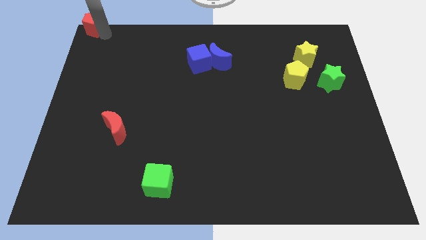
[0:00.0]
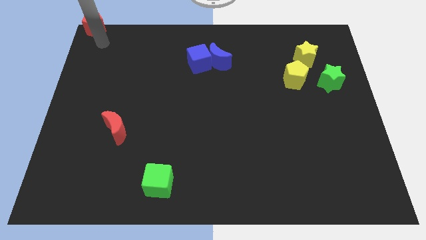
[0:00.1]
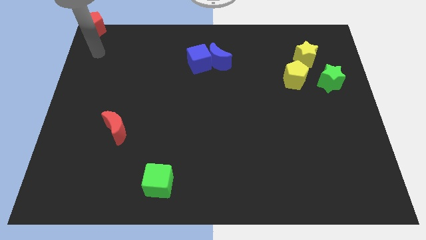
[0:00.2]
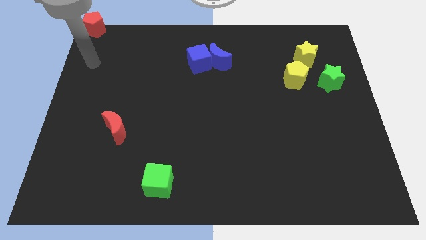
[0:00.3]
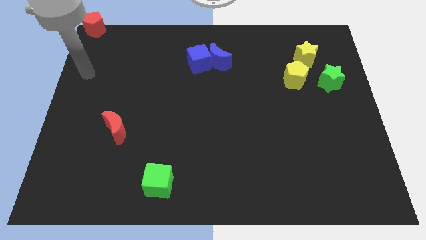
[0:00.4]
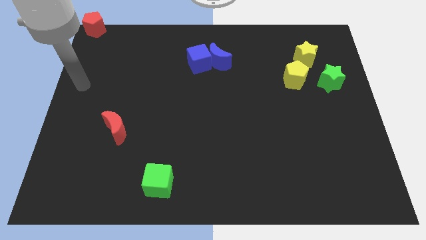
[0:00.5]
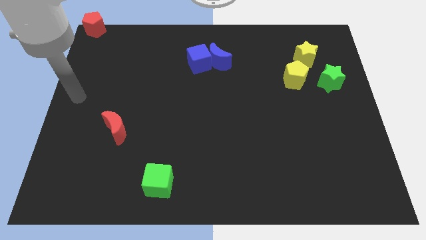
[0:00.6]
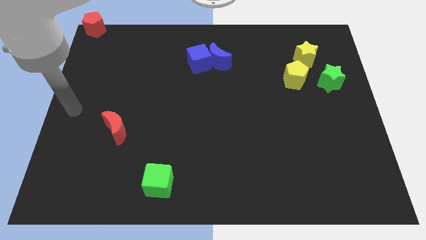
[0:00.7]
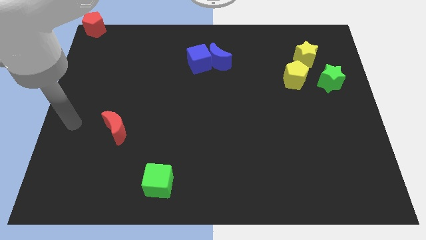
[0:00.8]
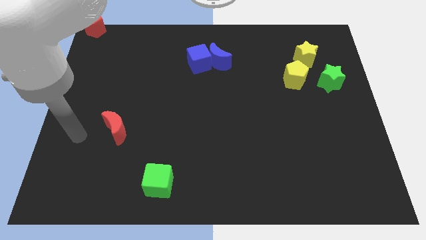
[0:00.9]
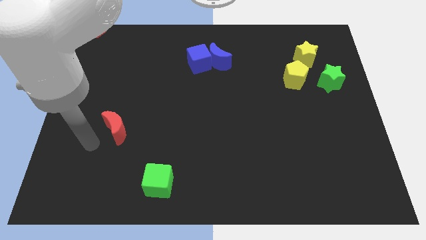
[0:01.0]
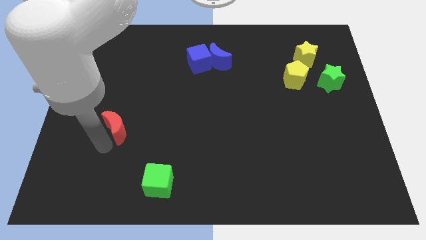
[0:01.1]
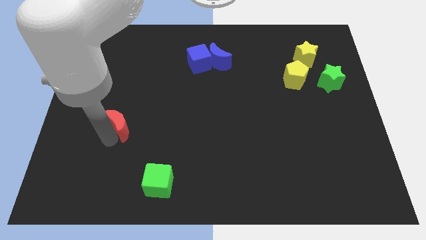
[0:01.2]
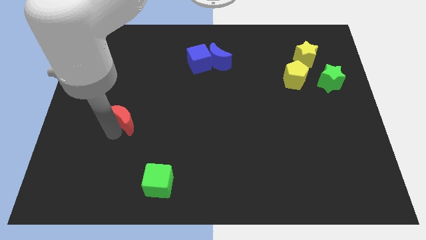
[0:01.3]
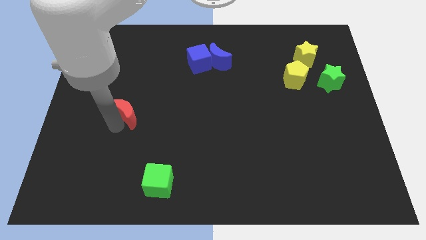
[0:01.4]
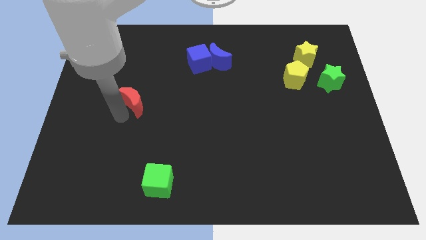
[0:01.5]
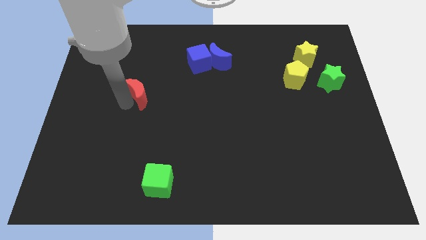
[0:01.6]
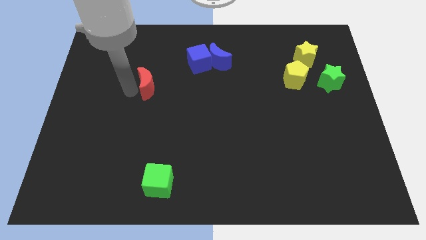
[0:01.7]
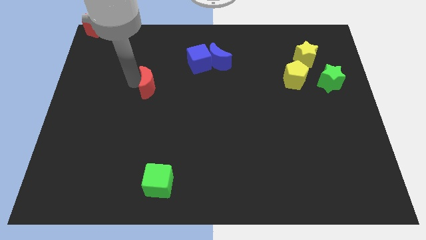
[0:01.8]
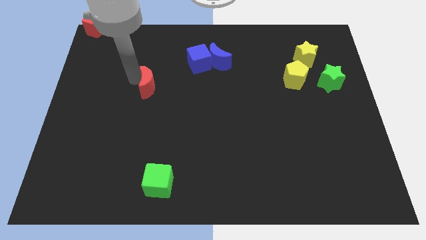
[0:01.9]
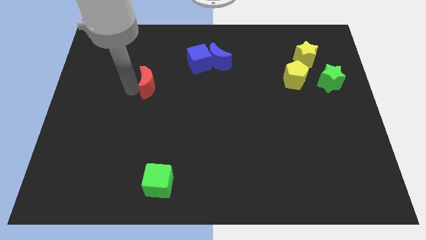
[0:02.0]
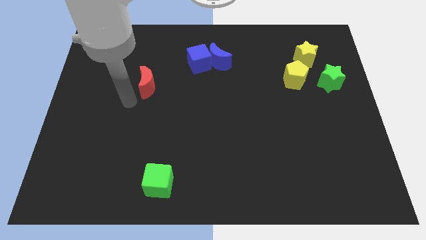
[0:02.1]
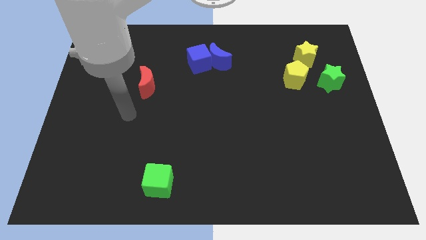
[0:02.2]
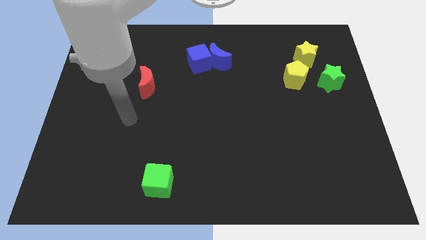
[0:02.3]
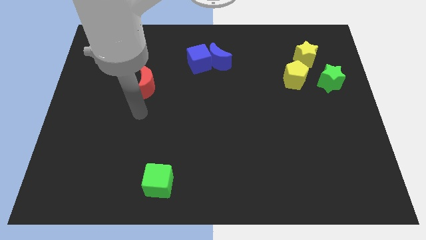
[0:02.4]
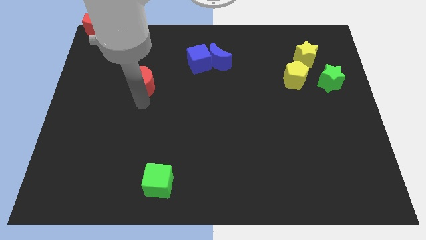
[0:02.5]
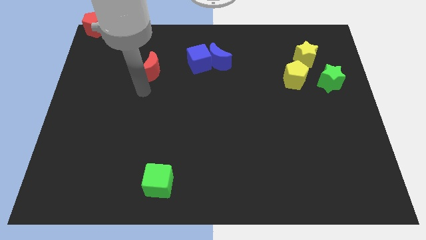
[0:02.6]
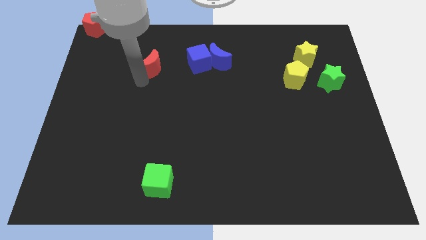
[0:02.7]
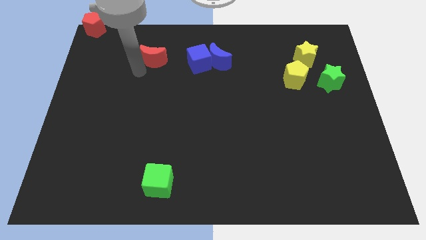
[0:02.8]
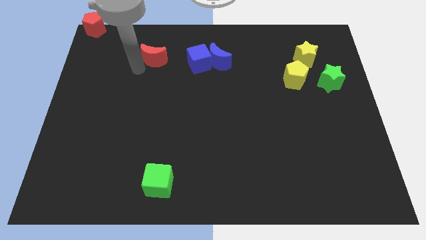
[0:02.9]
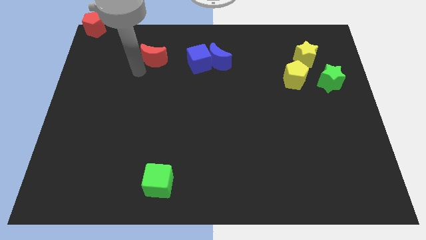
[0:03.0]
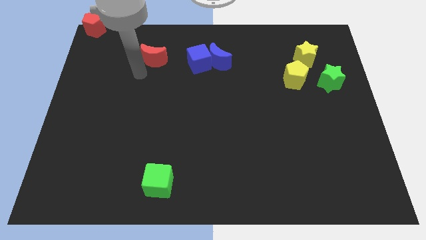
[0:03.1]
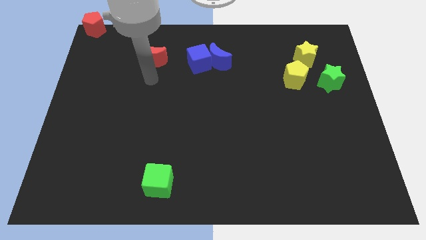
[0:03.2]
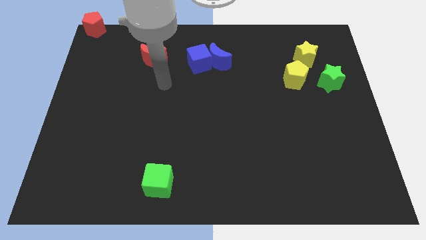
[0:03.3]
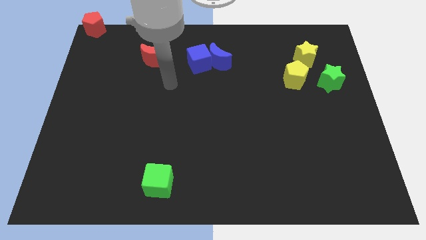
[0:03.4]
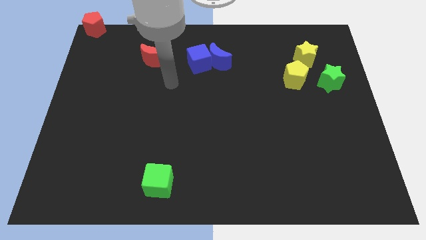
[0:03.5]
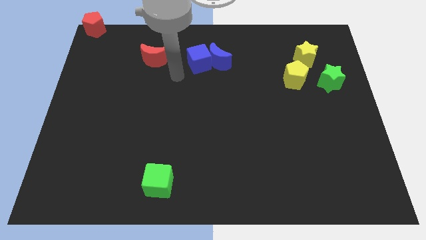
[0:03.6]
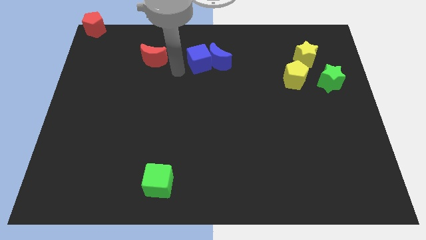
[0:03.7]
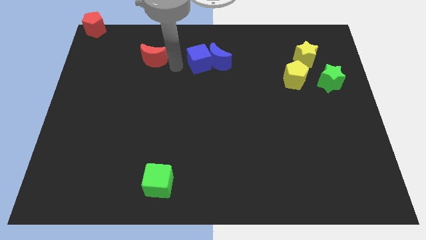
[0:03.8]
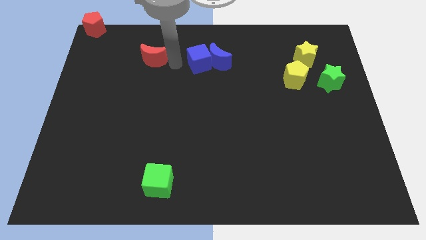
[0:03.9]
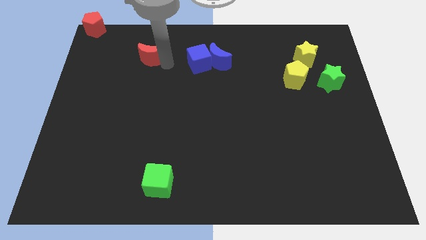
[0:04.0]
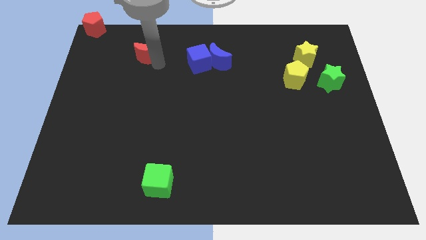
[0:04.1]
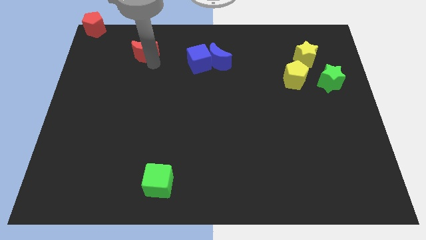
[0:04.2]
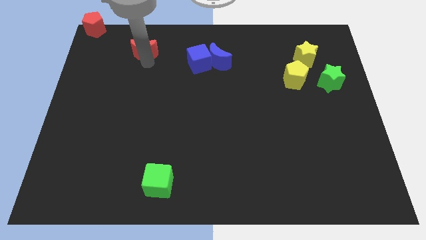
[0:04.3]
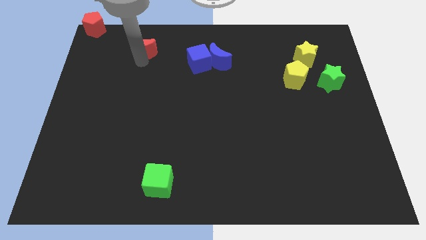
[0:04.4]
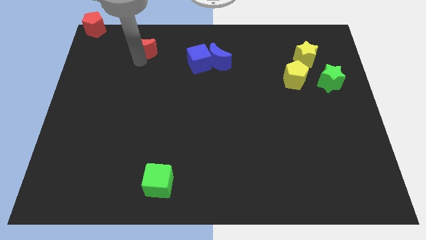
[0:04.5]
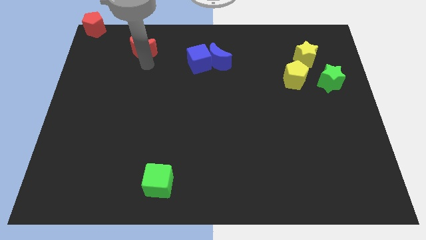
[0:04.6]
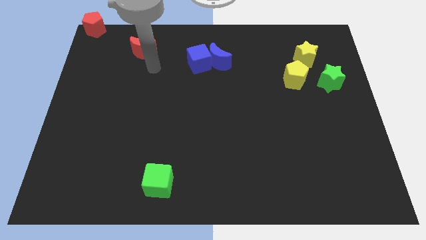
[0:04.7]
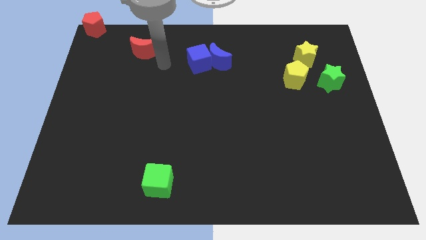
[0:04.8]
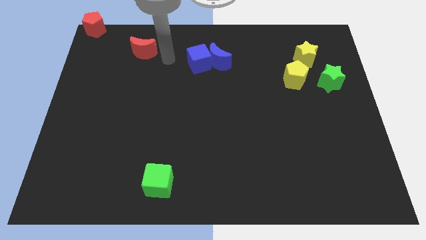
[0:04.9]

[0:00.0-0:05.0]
push the red moon towards the red pentagon

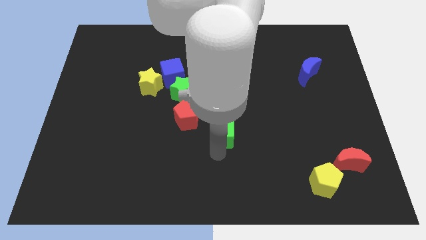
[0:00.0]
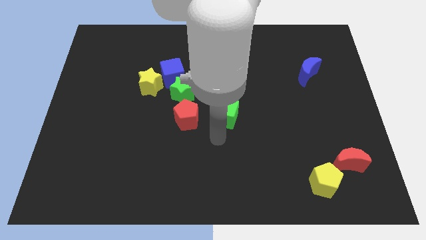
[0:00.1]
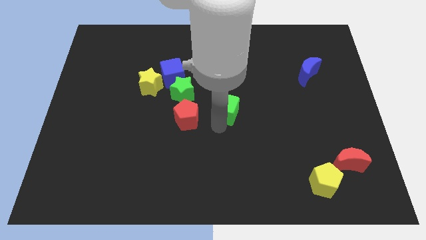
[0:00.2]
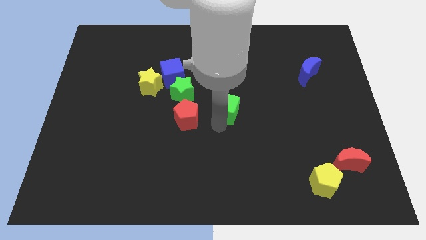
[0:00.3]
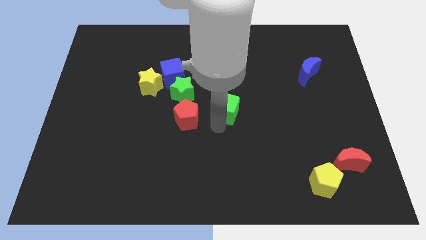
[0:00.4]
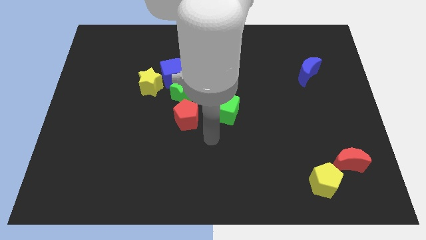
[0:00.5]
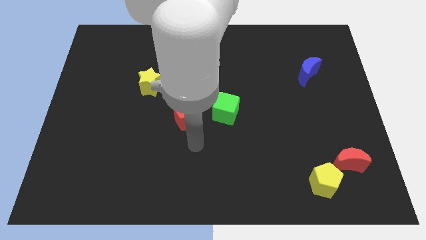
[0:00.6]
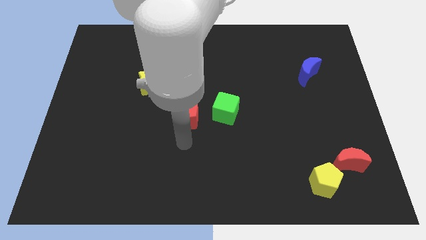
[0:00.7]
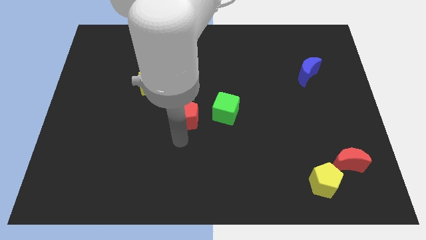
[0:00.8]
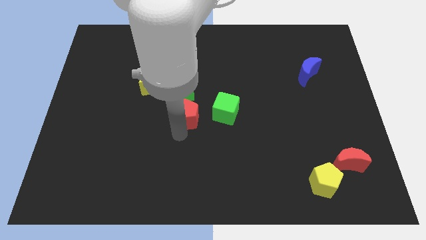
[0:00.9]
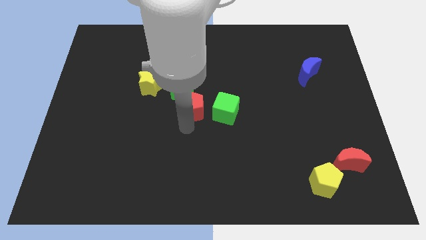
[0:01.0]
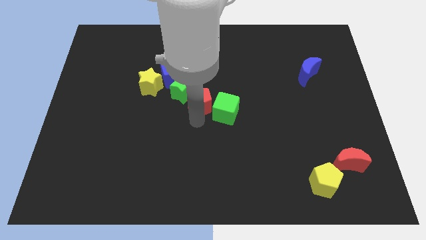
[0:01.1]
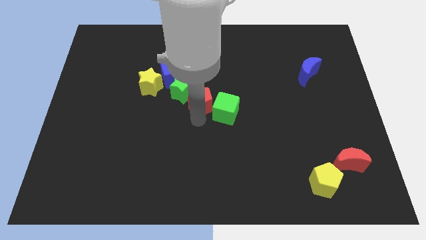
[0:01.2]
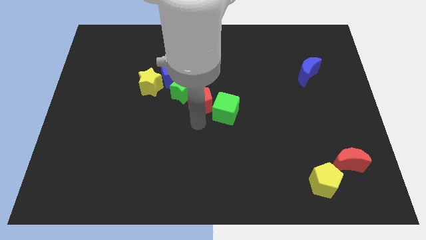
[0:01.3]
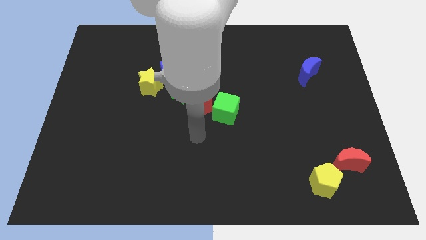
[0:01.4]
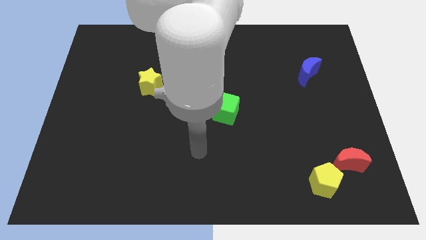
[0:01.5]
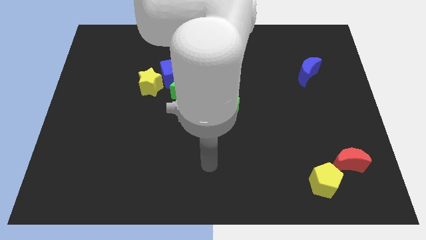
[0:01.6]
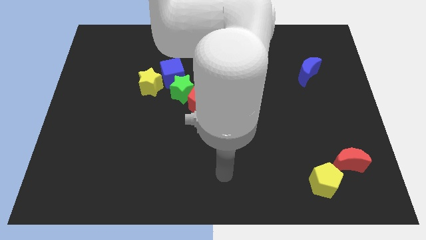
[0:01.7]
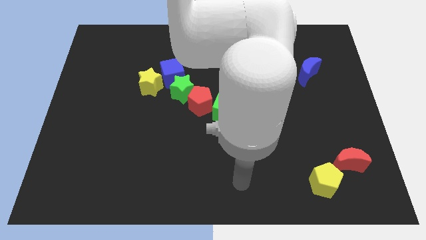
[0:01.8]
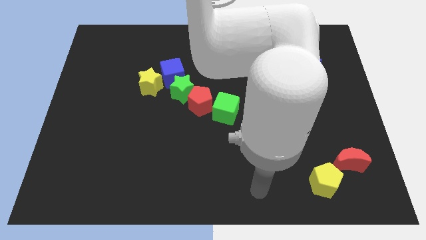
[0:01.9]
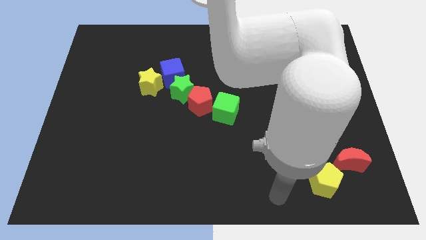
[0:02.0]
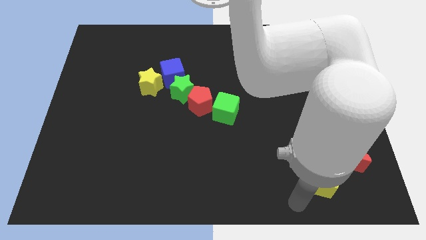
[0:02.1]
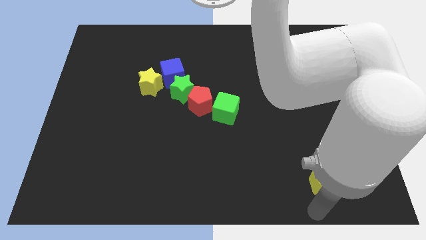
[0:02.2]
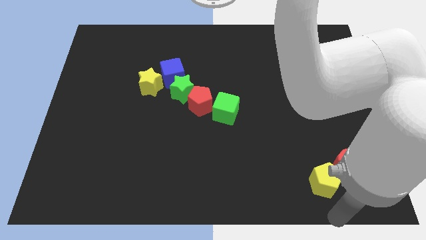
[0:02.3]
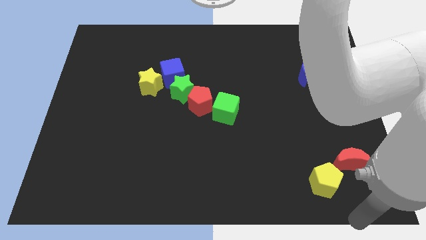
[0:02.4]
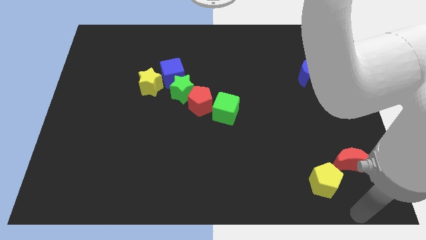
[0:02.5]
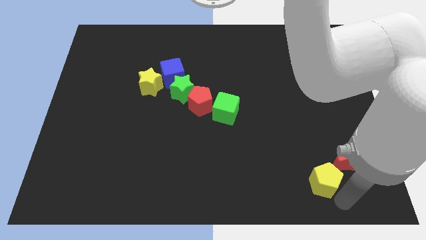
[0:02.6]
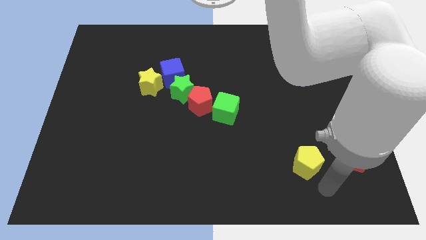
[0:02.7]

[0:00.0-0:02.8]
place the red pentagon and green cube diagonally in a line with the green star

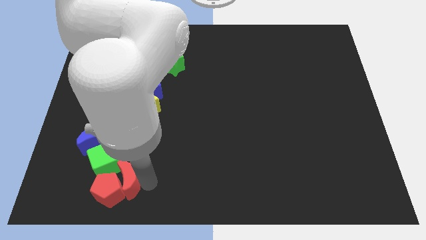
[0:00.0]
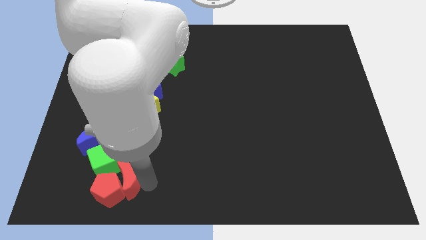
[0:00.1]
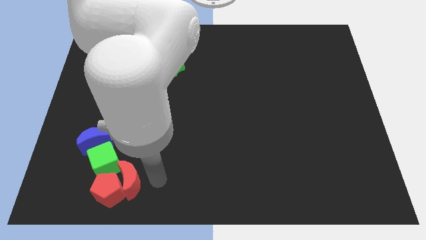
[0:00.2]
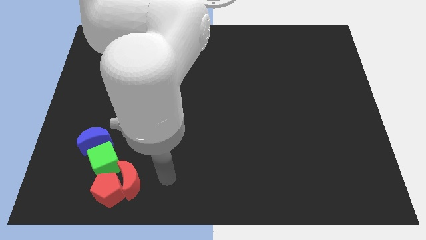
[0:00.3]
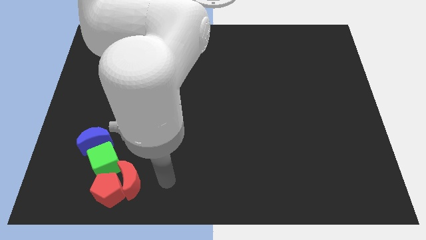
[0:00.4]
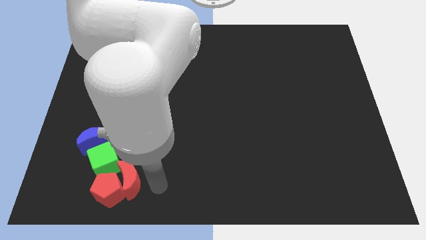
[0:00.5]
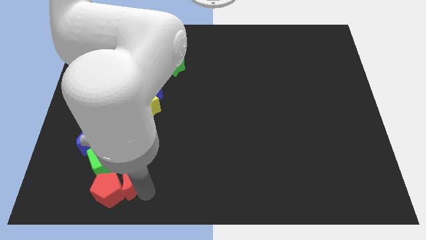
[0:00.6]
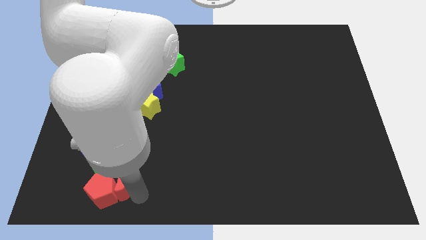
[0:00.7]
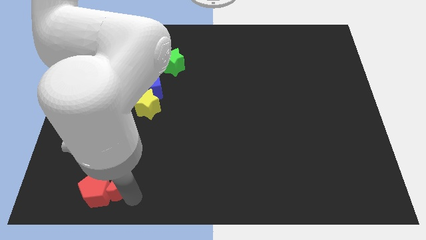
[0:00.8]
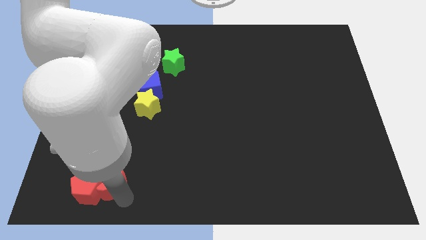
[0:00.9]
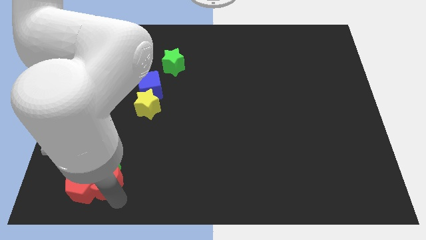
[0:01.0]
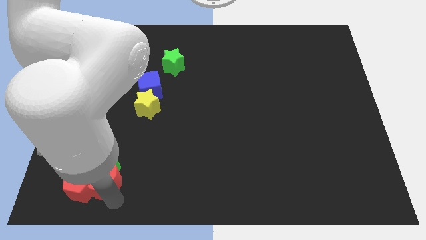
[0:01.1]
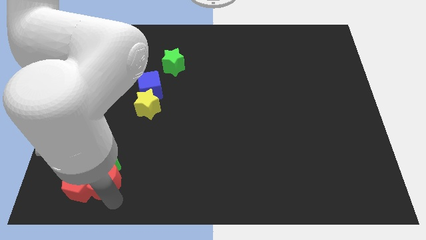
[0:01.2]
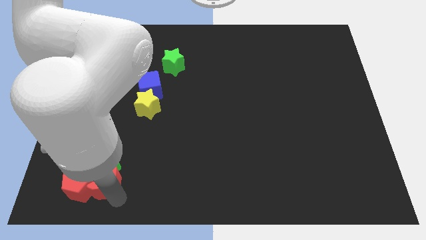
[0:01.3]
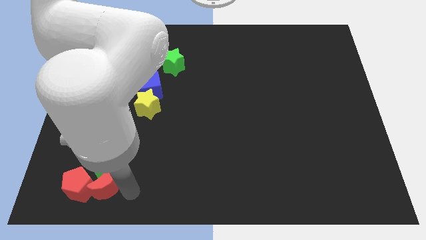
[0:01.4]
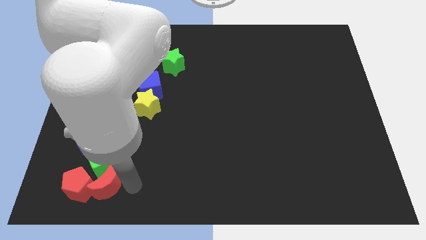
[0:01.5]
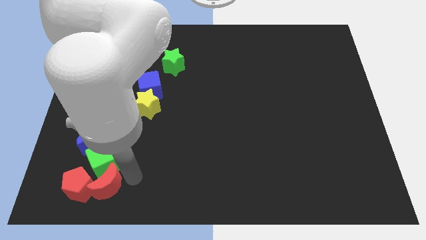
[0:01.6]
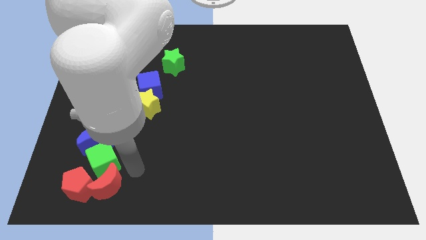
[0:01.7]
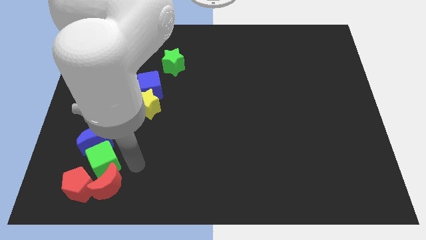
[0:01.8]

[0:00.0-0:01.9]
place red moon to the bottom of the green cube
